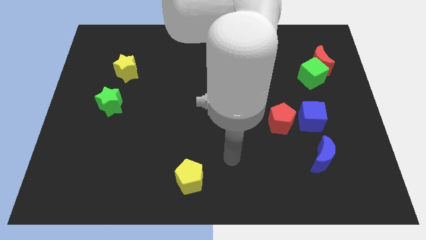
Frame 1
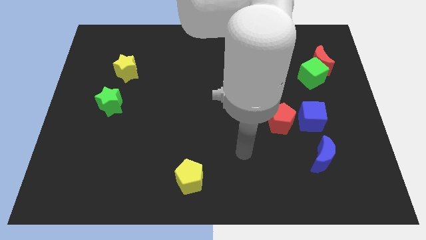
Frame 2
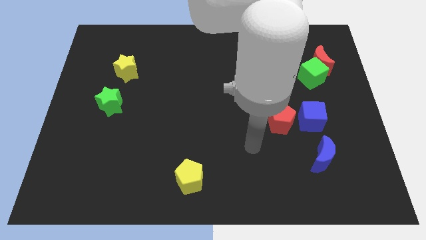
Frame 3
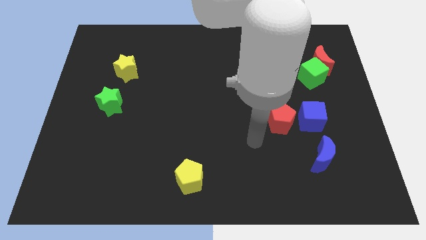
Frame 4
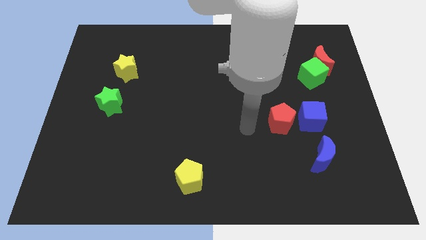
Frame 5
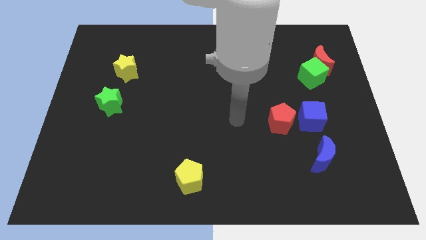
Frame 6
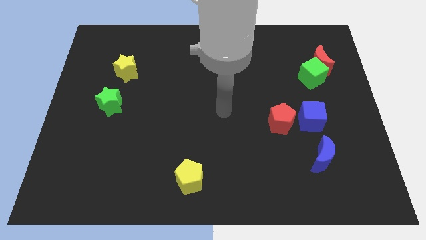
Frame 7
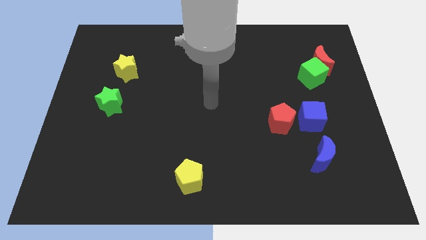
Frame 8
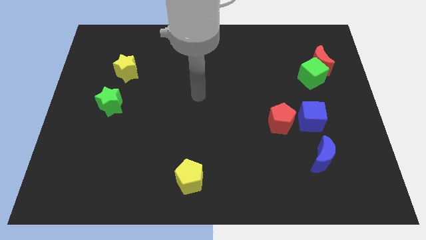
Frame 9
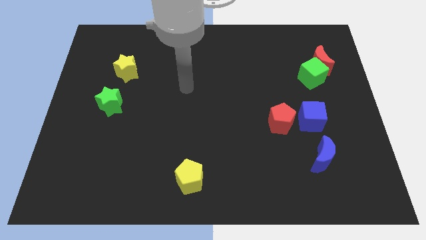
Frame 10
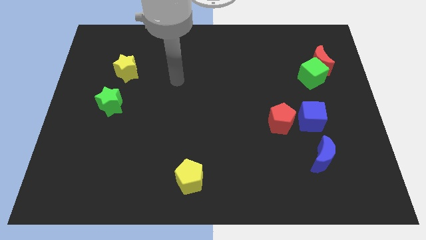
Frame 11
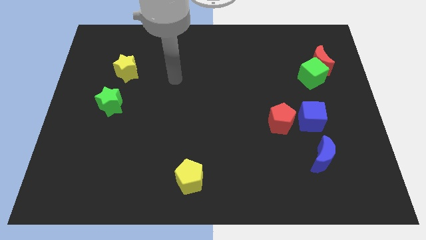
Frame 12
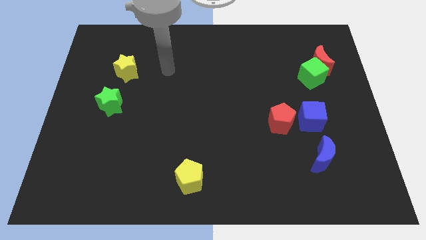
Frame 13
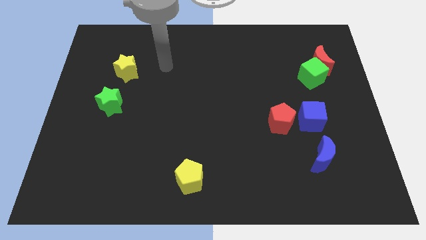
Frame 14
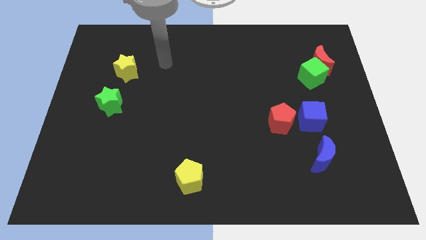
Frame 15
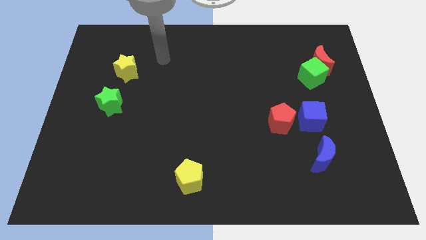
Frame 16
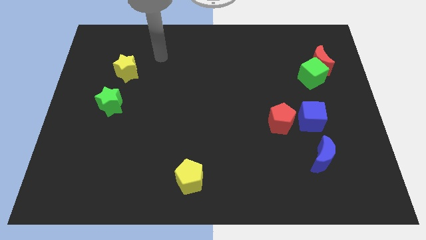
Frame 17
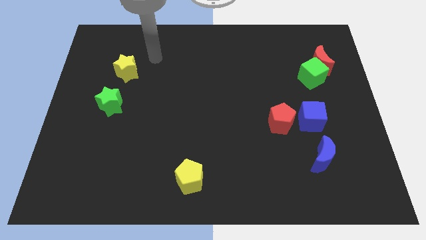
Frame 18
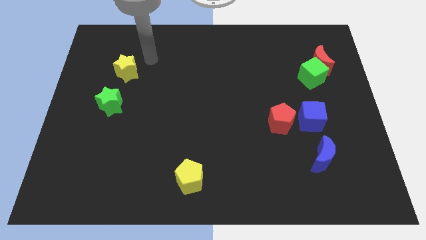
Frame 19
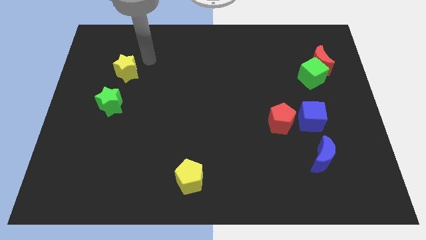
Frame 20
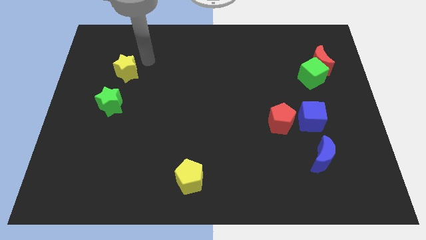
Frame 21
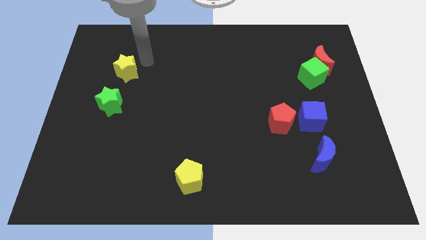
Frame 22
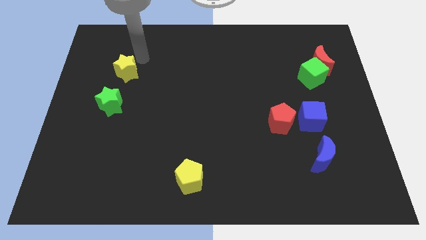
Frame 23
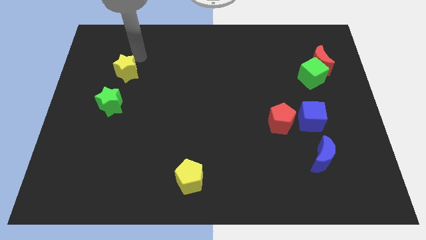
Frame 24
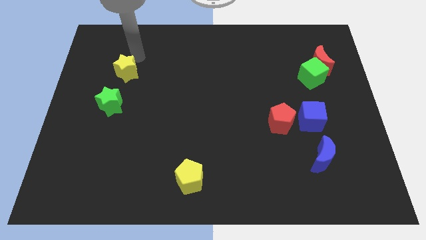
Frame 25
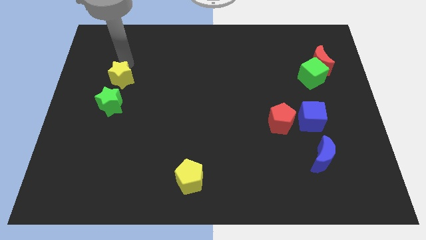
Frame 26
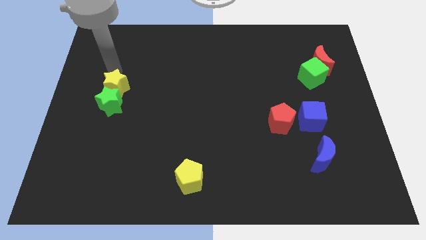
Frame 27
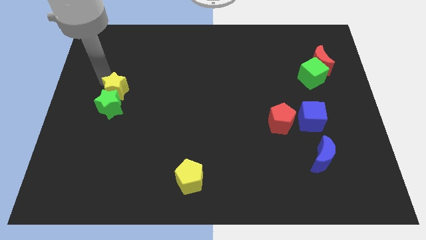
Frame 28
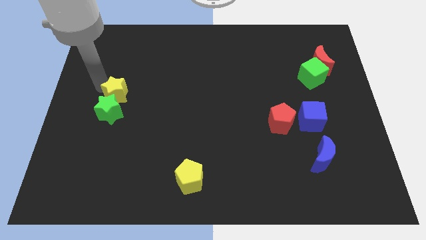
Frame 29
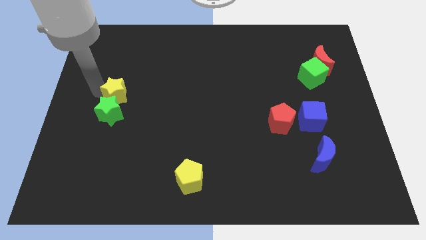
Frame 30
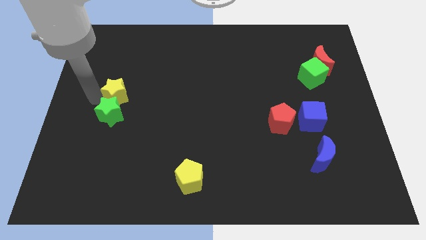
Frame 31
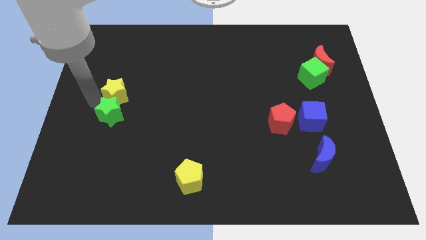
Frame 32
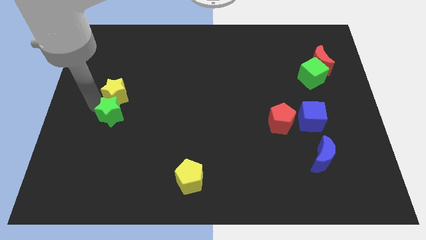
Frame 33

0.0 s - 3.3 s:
push the yellow star and green star together

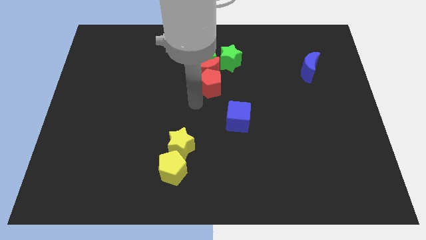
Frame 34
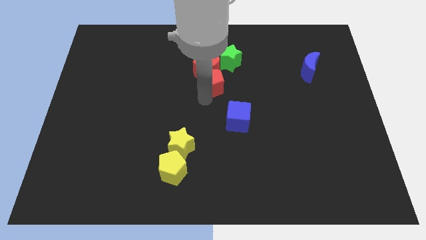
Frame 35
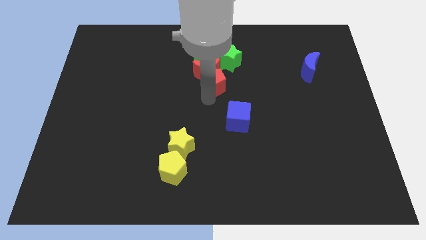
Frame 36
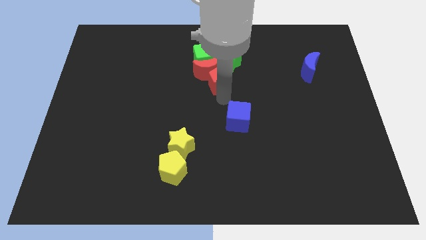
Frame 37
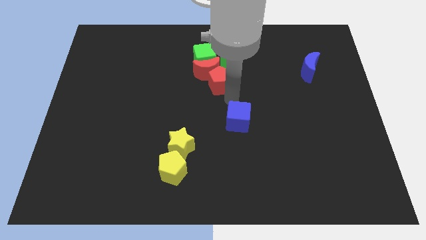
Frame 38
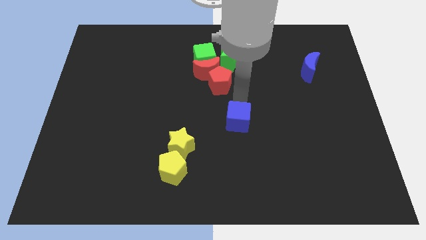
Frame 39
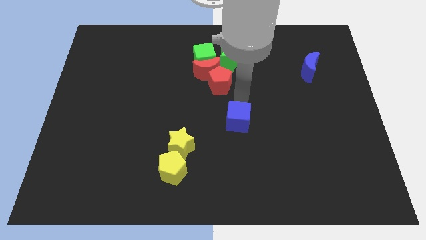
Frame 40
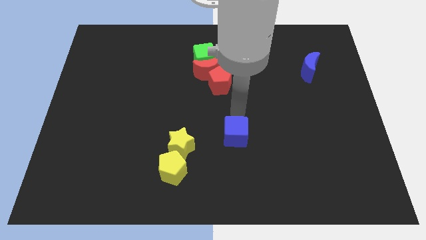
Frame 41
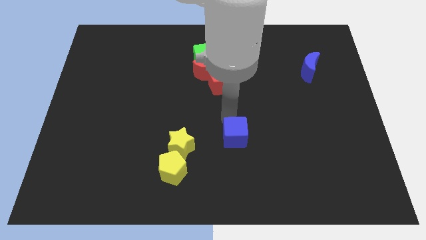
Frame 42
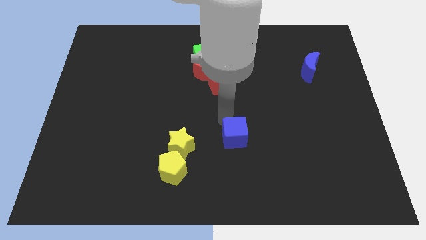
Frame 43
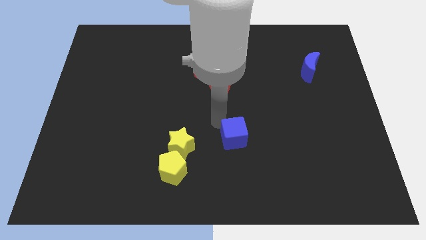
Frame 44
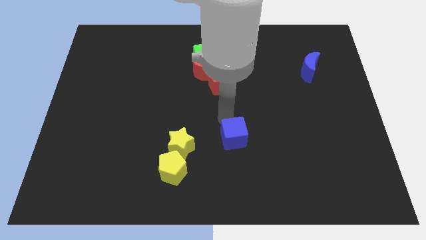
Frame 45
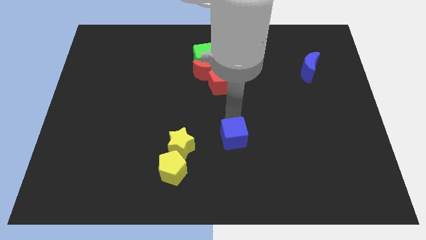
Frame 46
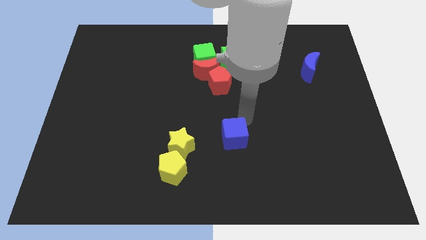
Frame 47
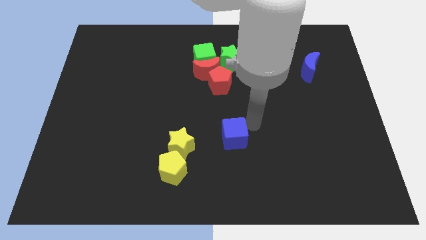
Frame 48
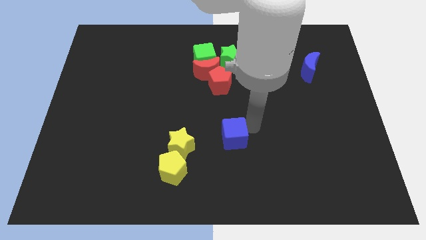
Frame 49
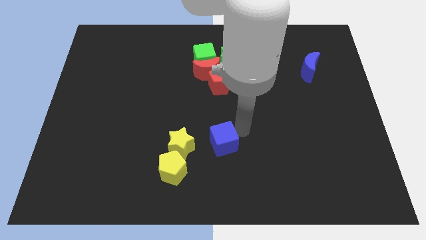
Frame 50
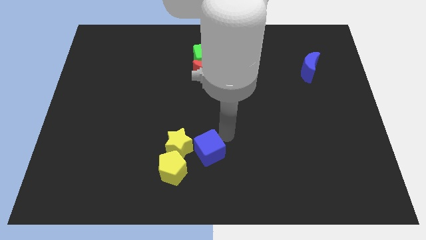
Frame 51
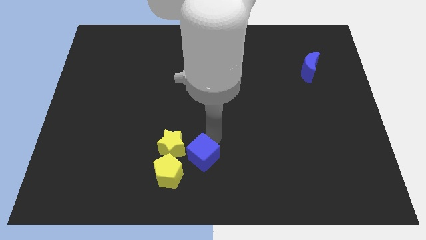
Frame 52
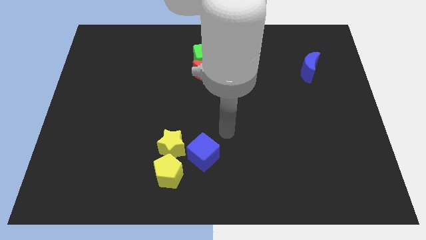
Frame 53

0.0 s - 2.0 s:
place a blue cube close to the yellow star

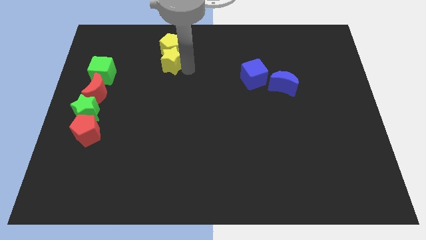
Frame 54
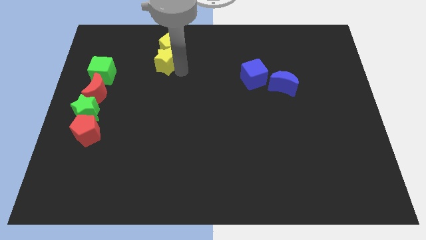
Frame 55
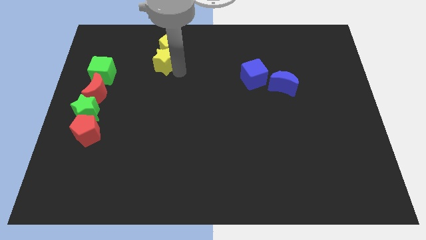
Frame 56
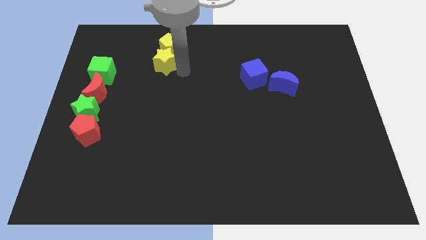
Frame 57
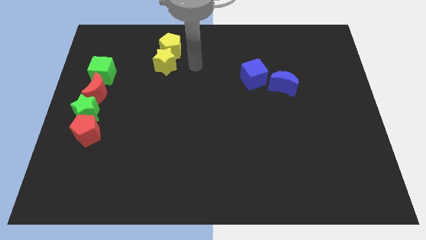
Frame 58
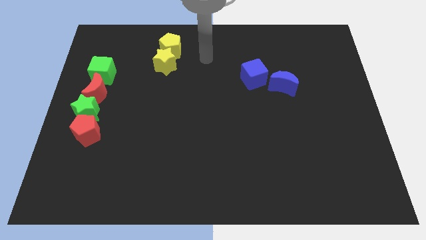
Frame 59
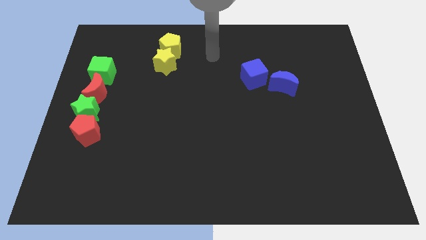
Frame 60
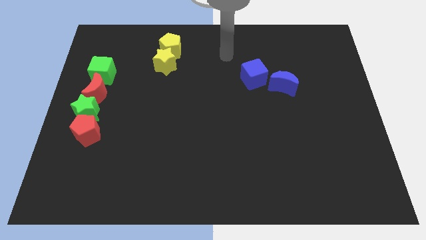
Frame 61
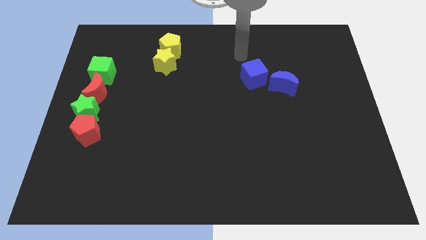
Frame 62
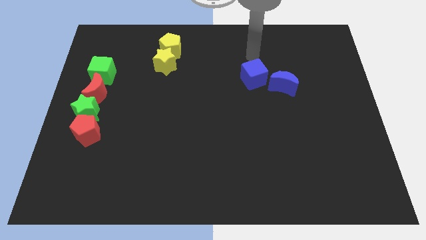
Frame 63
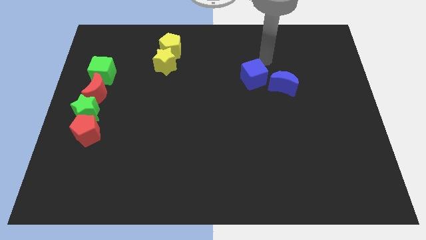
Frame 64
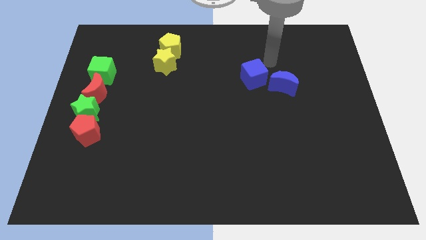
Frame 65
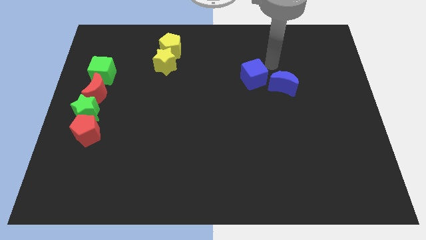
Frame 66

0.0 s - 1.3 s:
move arm near blue cube

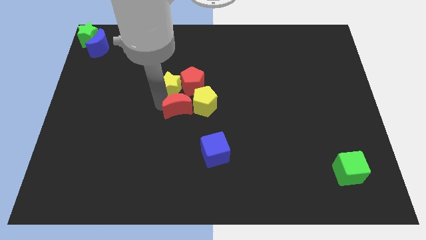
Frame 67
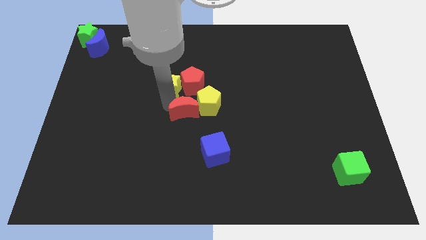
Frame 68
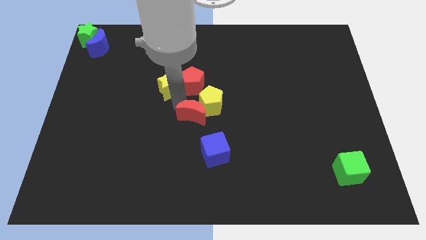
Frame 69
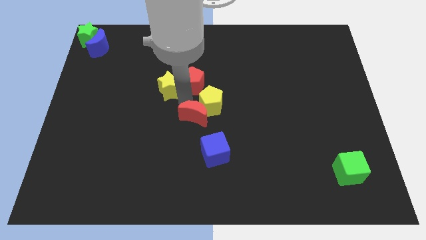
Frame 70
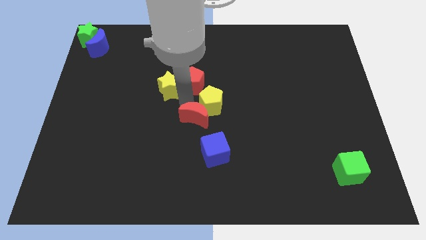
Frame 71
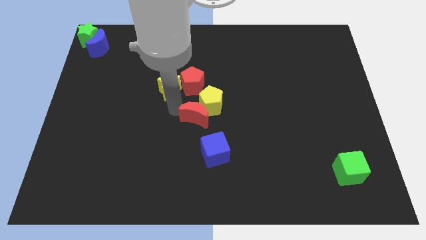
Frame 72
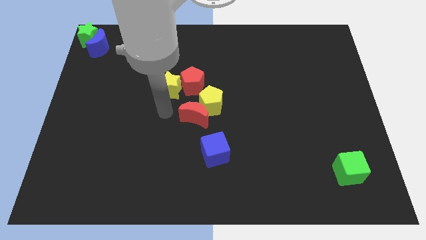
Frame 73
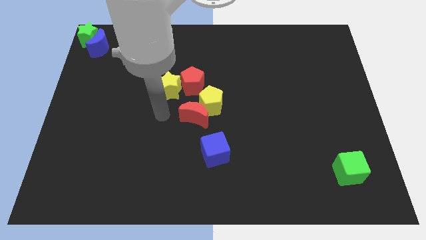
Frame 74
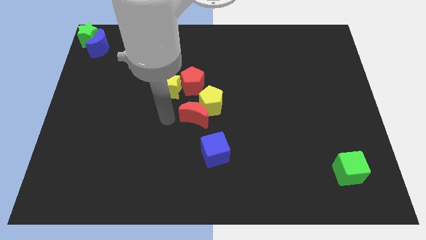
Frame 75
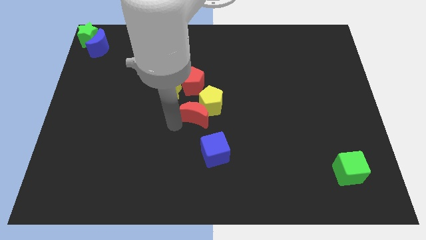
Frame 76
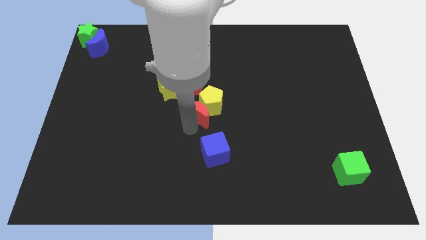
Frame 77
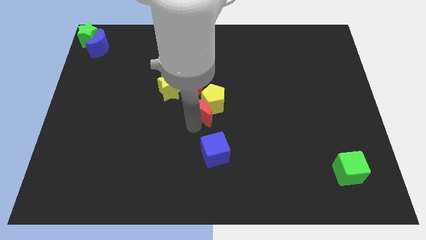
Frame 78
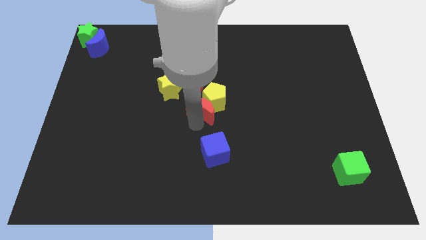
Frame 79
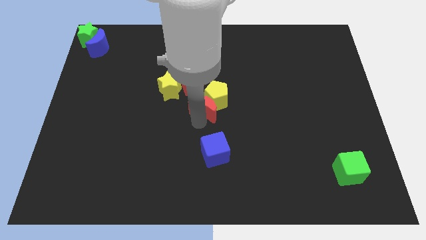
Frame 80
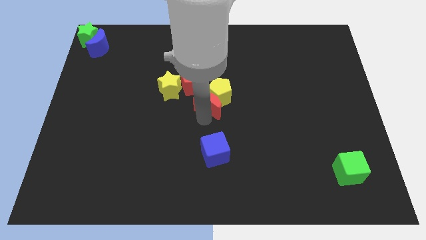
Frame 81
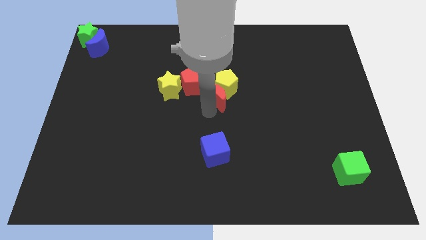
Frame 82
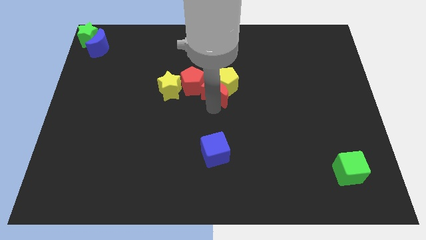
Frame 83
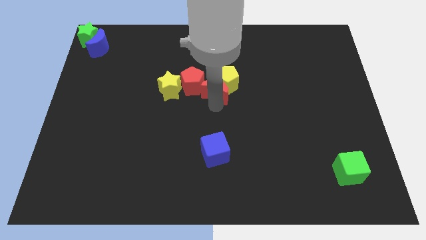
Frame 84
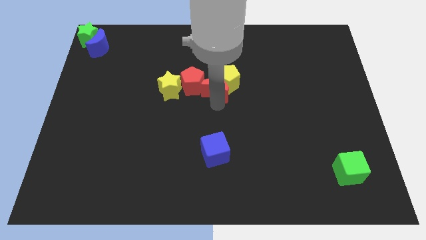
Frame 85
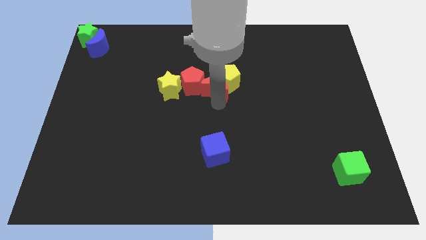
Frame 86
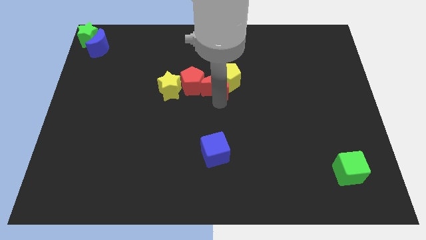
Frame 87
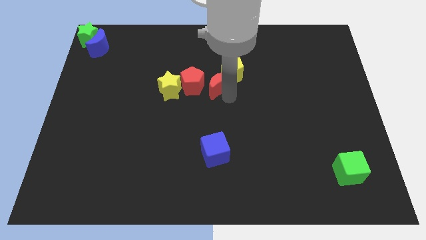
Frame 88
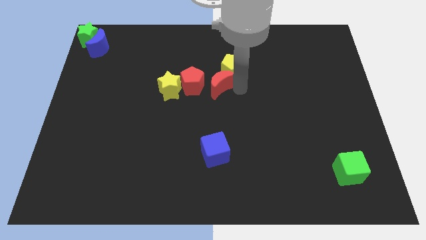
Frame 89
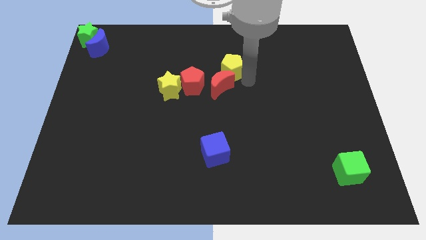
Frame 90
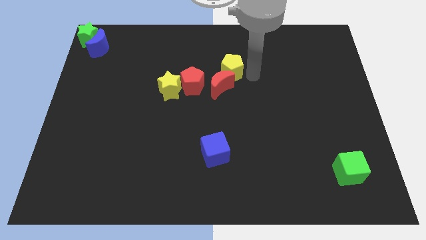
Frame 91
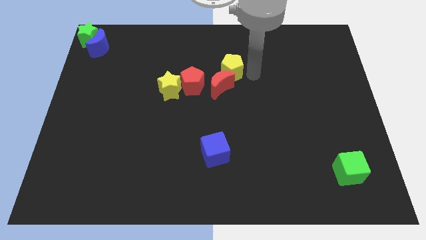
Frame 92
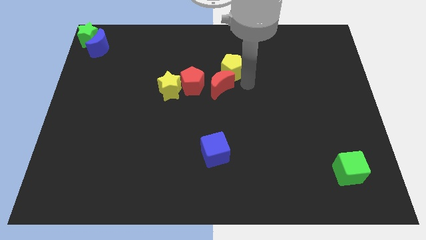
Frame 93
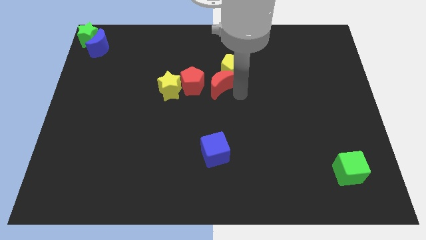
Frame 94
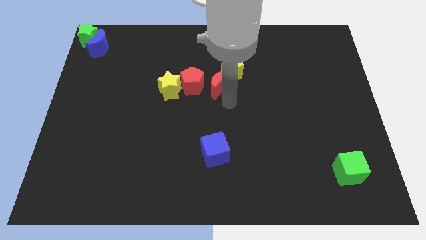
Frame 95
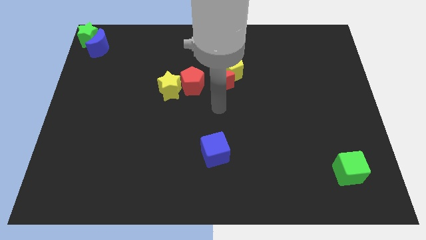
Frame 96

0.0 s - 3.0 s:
push the red crescent along with yellow pentagon to the right of red pentagon
